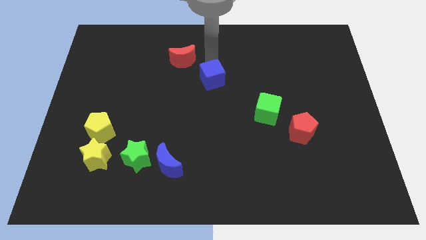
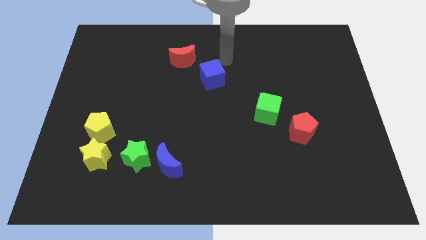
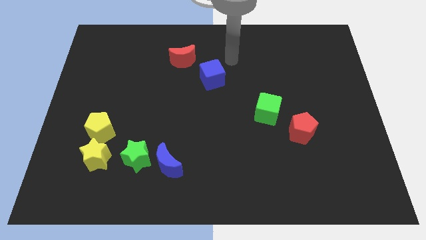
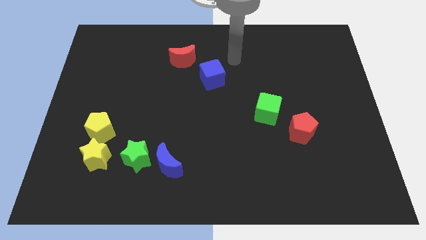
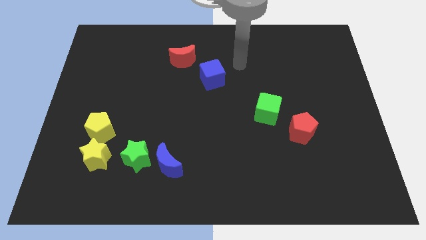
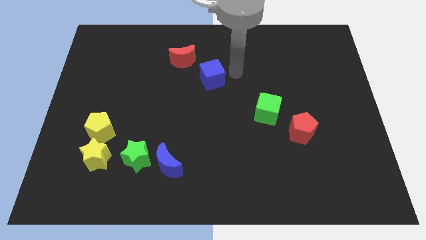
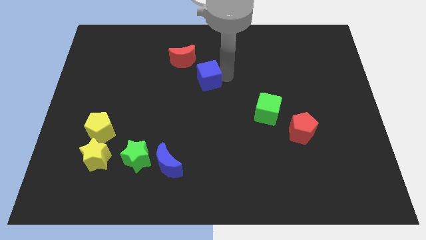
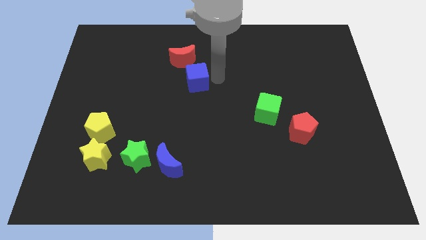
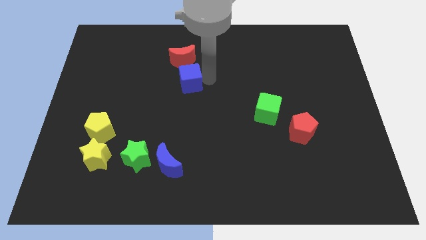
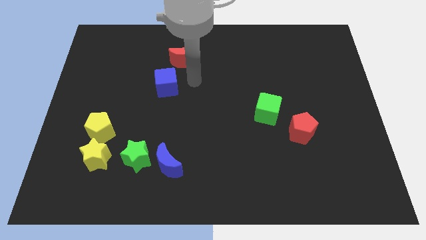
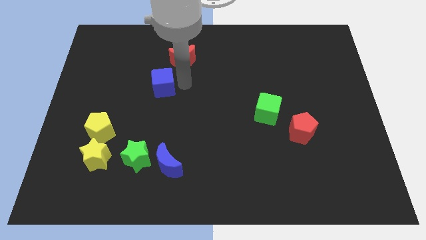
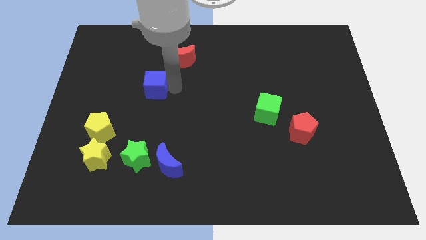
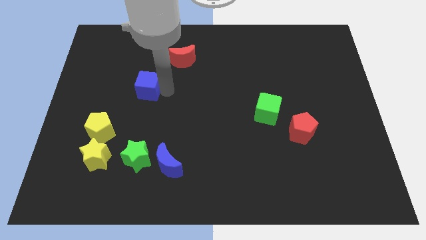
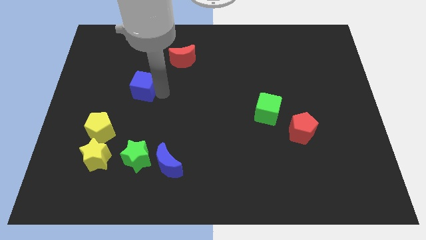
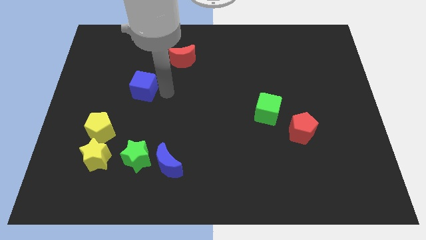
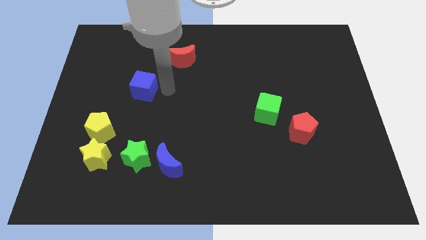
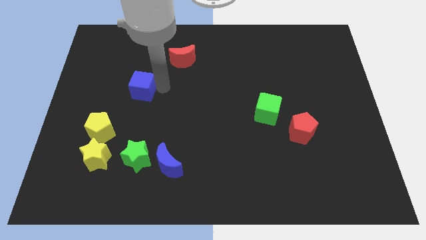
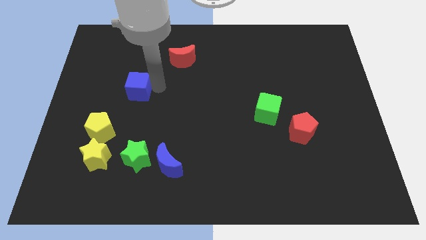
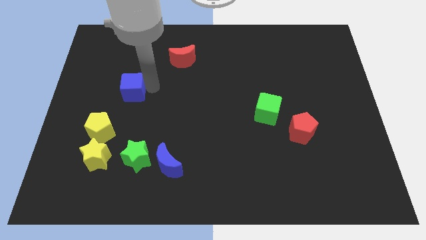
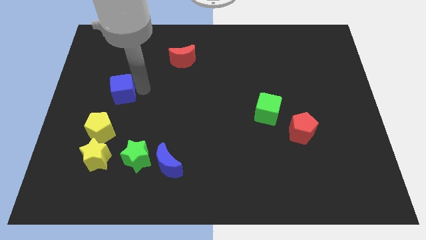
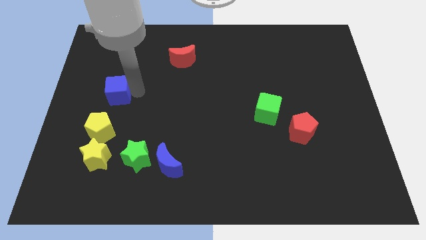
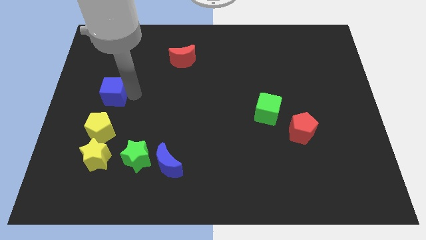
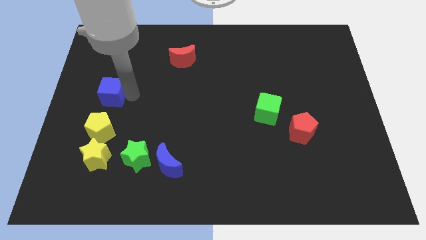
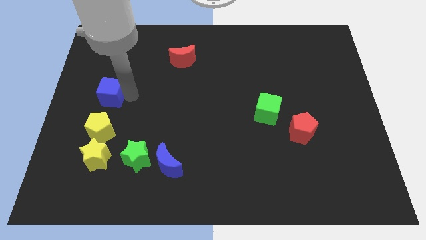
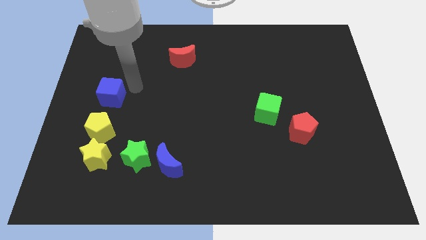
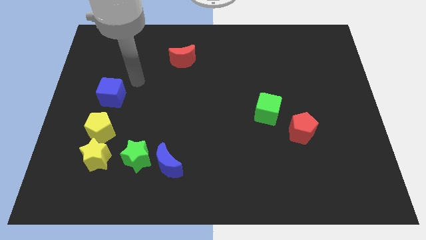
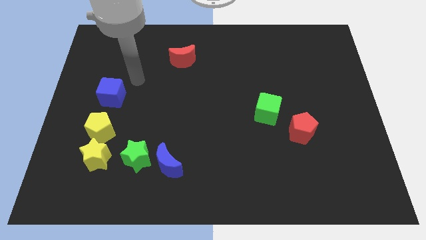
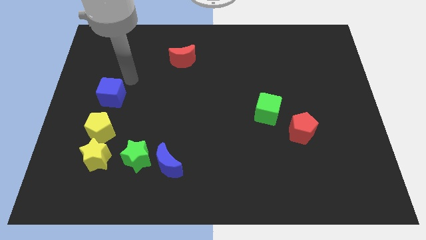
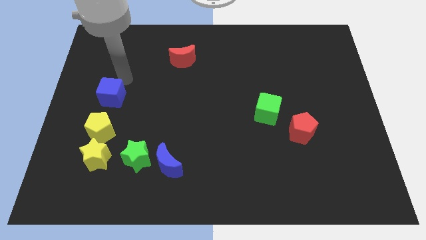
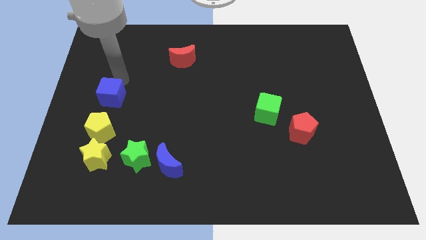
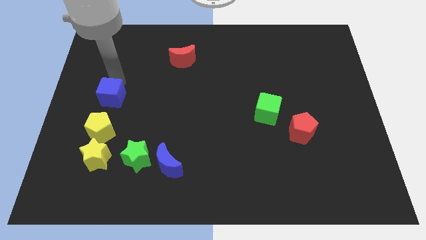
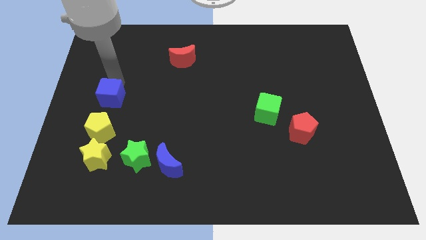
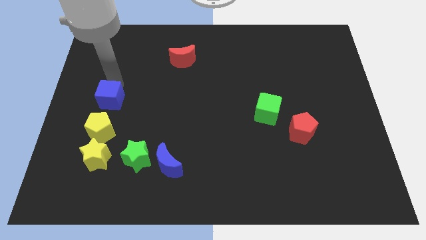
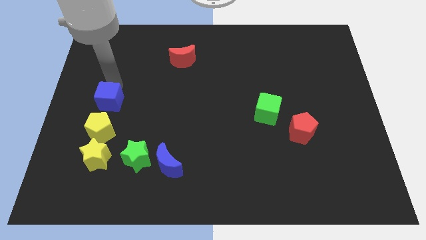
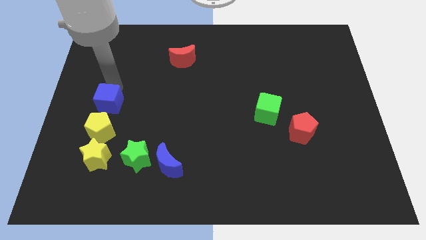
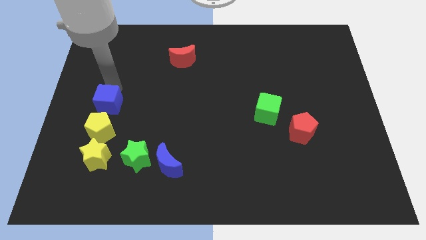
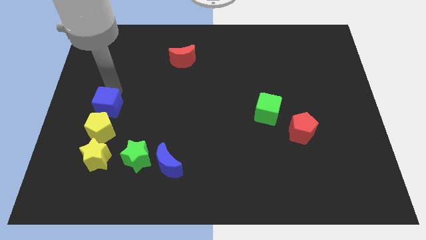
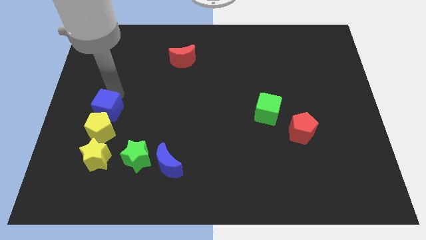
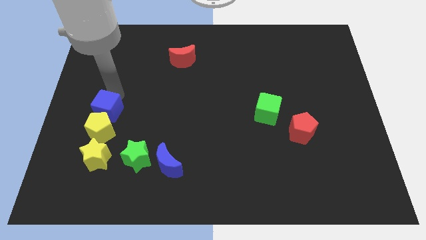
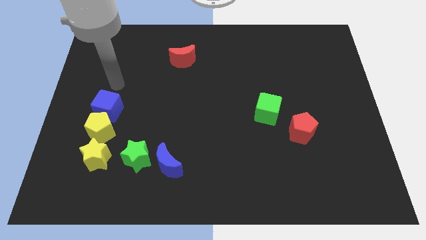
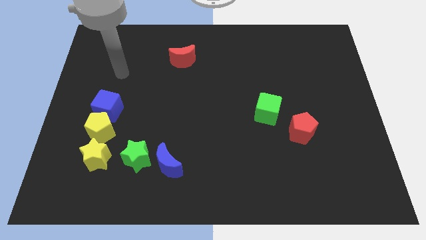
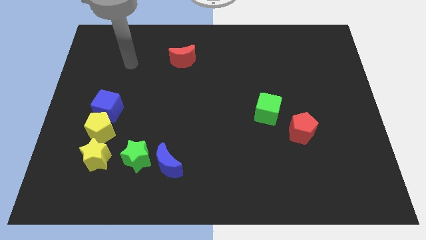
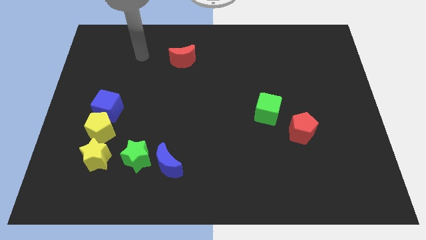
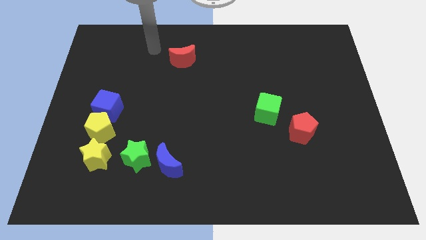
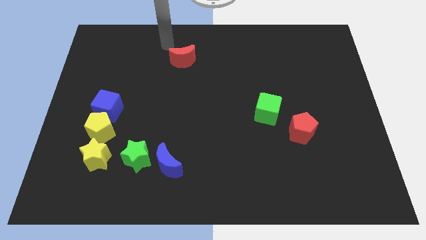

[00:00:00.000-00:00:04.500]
place the blue cube to the top of the yellow pentagon

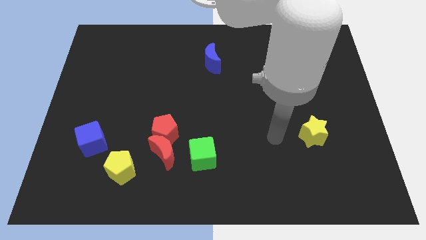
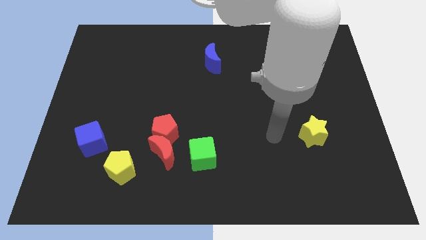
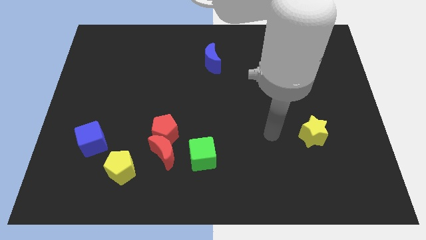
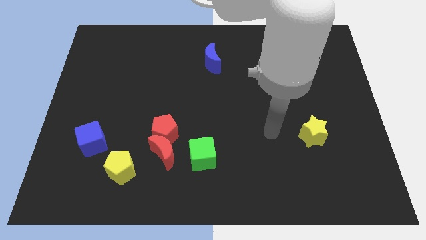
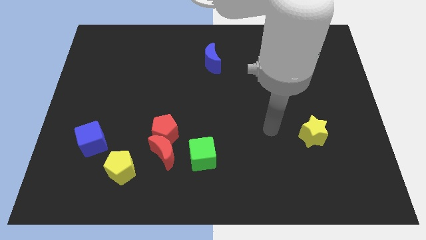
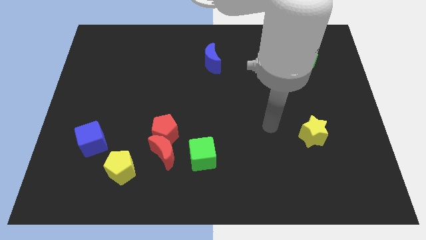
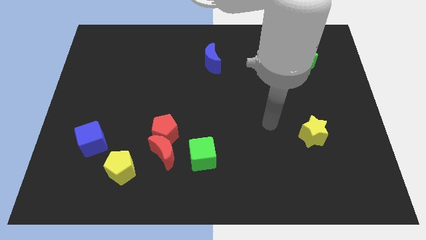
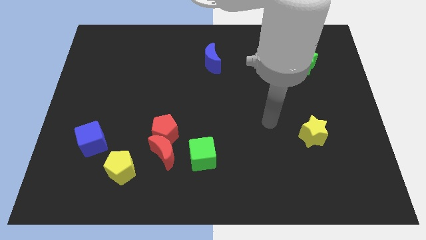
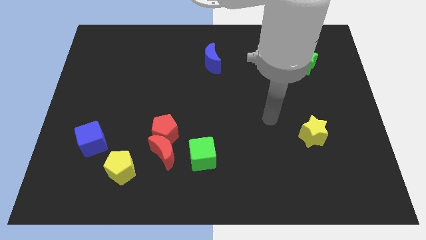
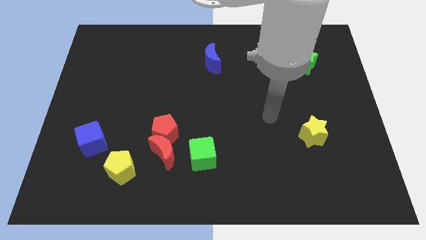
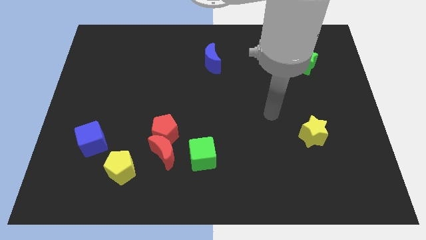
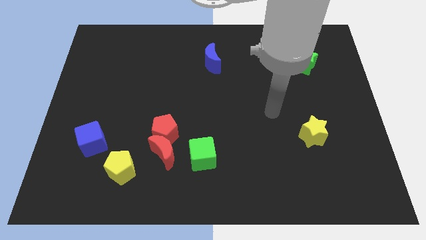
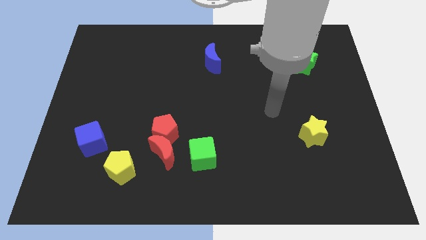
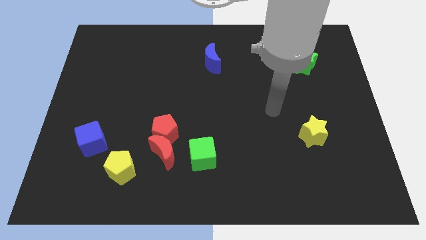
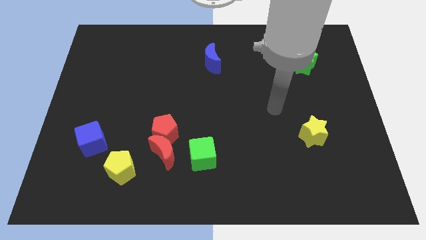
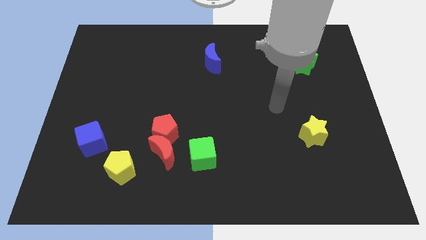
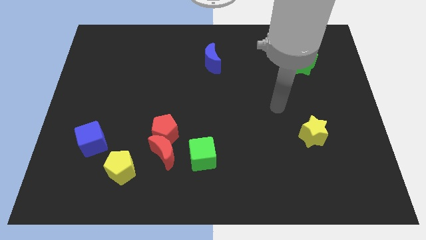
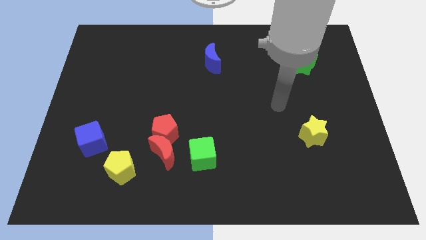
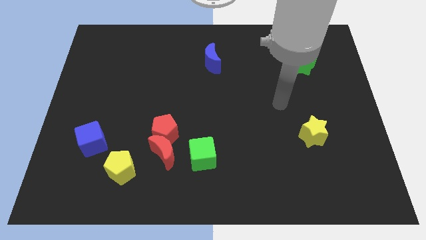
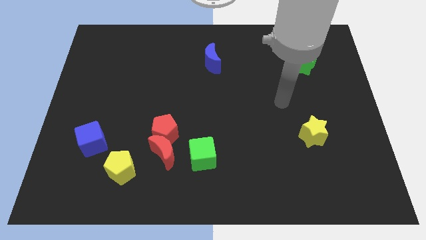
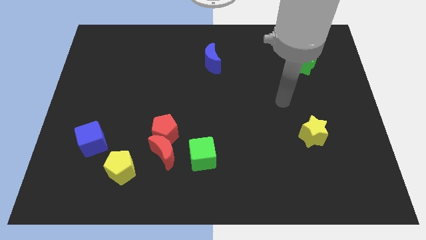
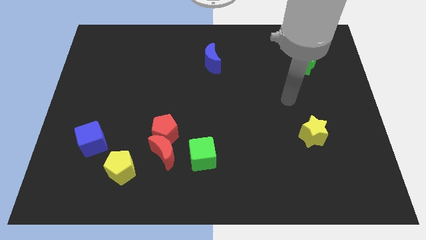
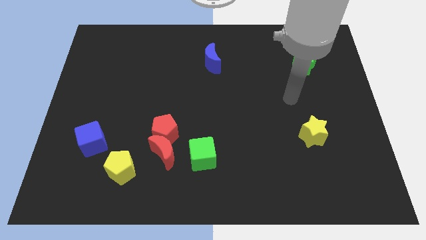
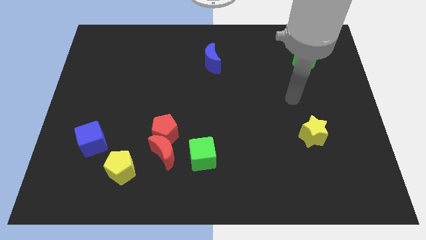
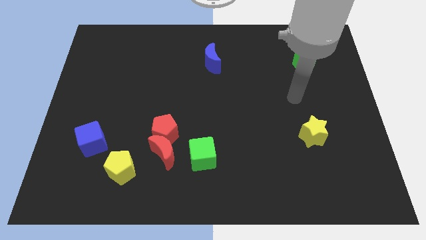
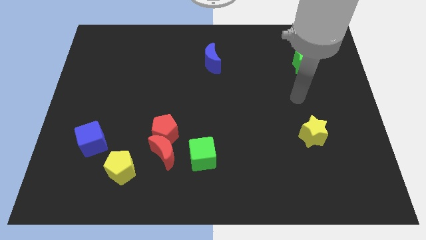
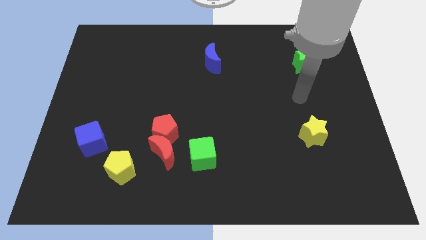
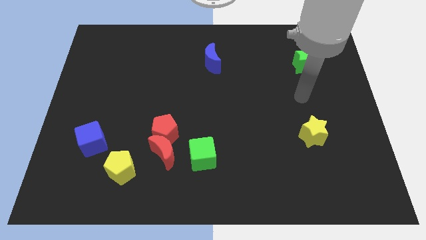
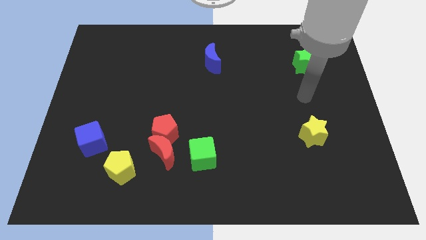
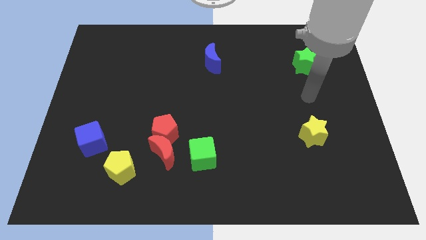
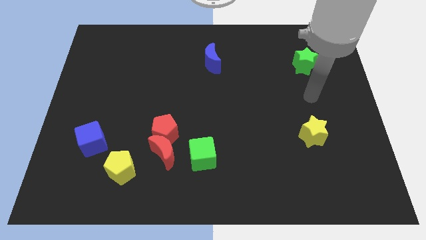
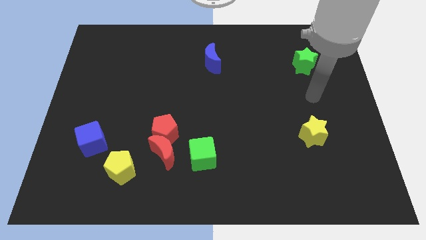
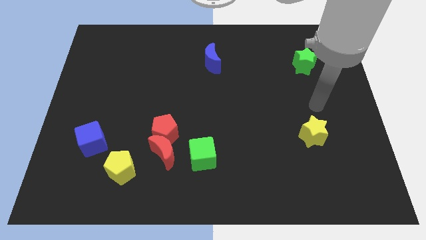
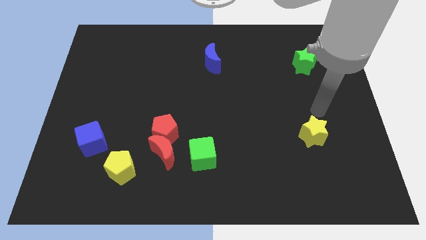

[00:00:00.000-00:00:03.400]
place the arm above the yellow star

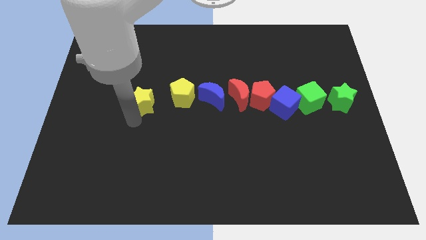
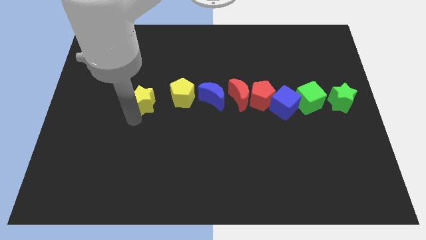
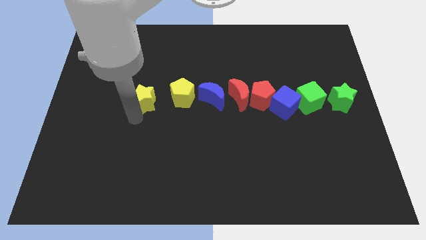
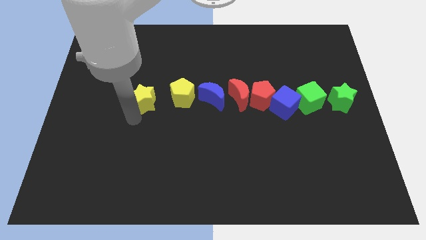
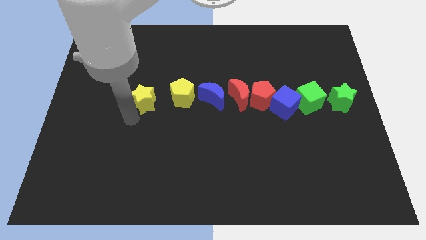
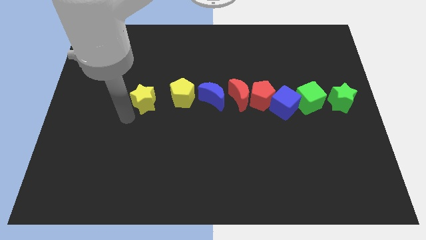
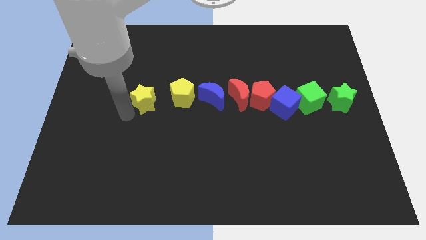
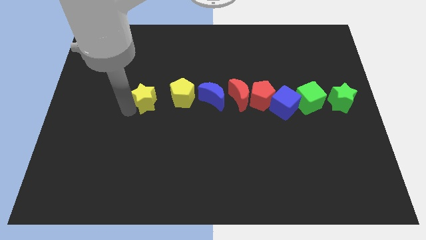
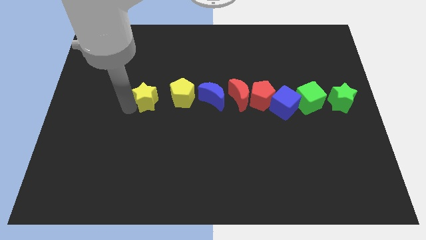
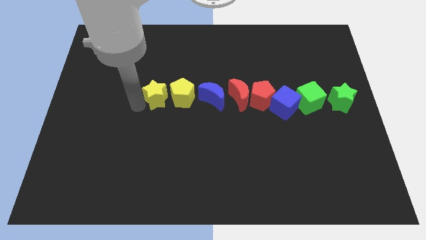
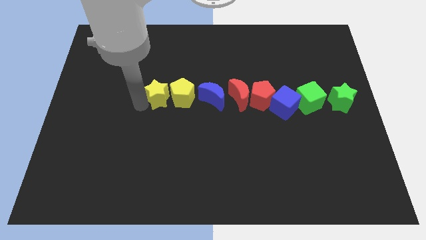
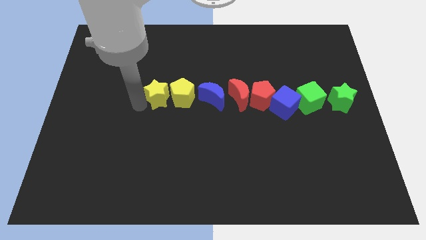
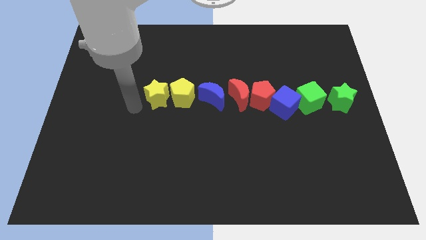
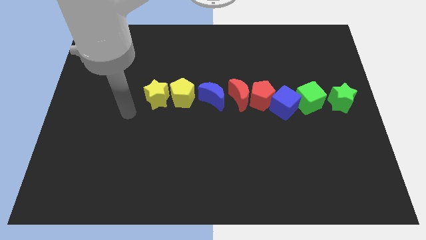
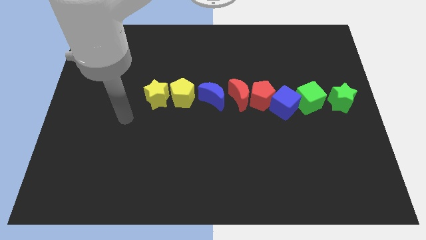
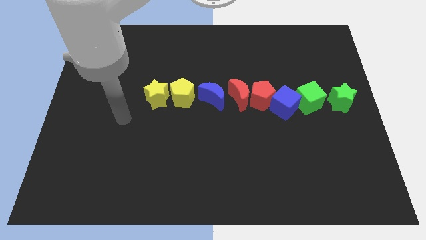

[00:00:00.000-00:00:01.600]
move the yellow star close to the left side of the yellow pentagon
